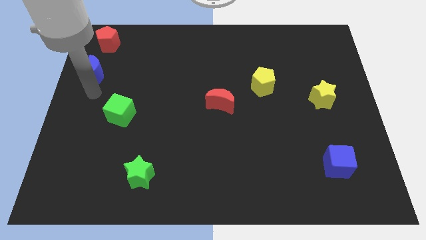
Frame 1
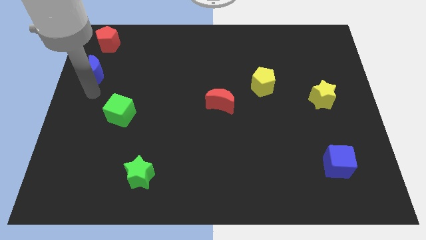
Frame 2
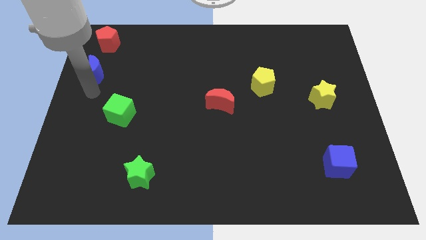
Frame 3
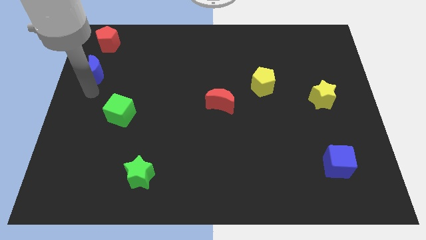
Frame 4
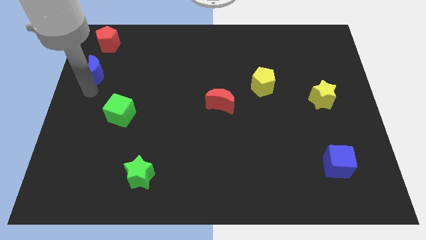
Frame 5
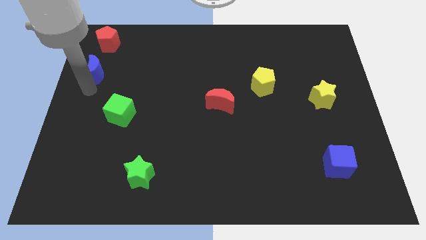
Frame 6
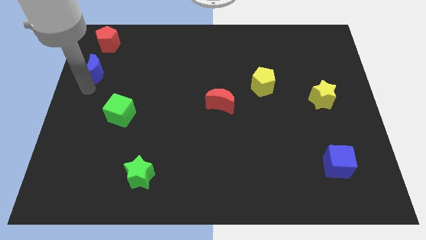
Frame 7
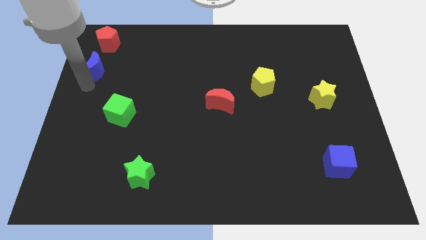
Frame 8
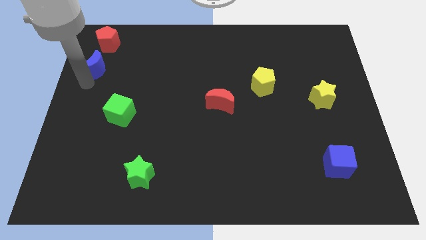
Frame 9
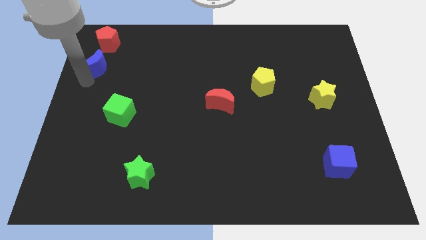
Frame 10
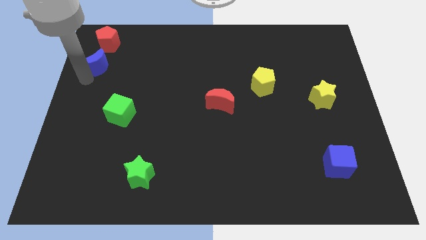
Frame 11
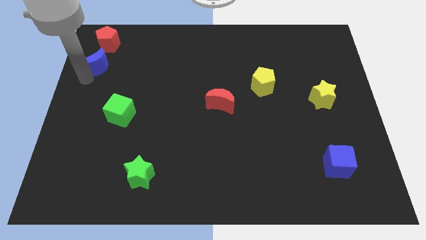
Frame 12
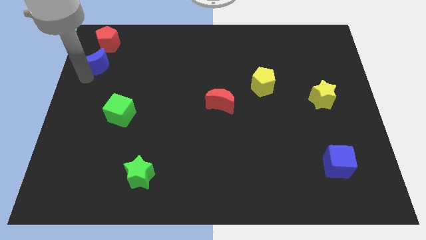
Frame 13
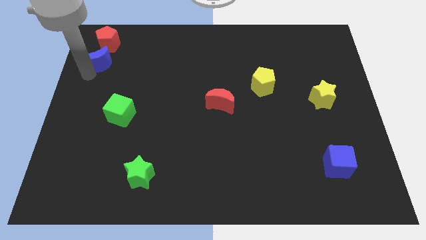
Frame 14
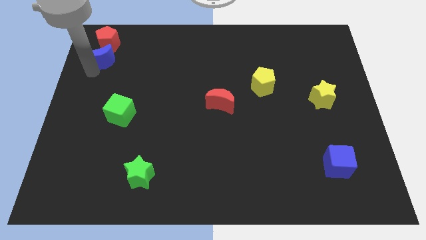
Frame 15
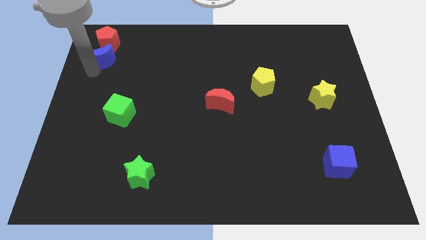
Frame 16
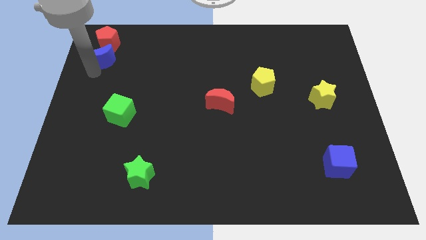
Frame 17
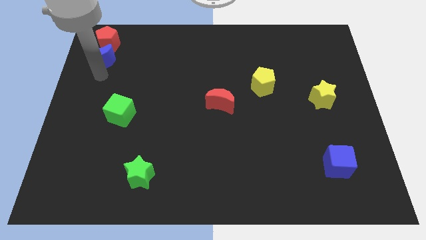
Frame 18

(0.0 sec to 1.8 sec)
push the blue crescent towards the top left side of the board

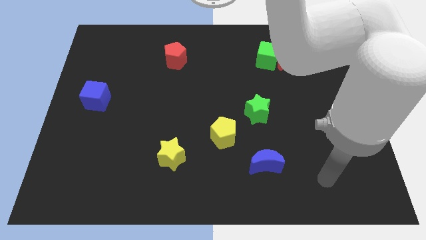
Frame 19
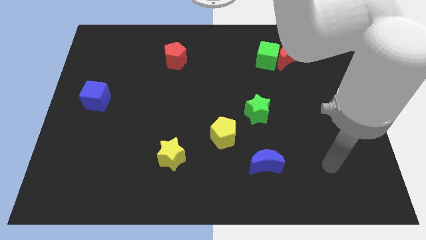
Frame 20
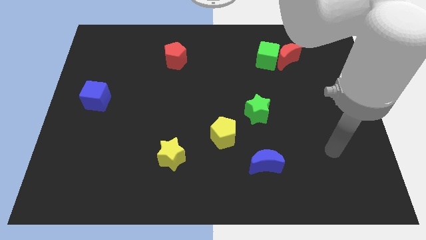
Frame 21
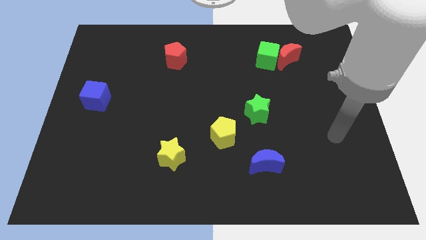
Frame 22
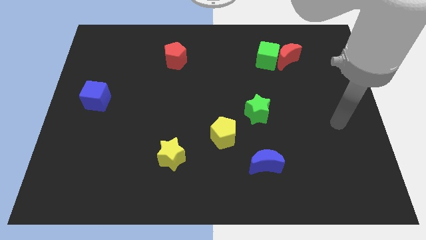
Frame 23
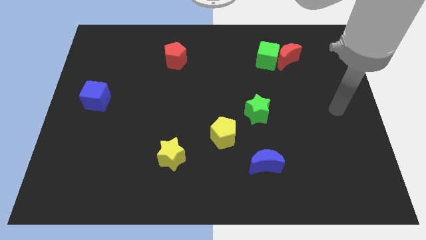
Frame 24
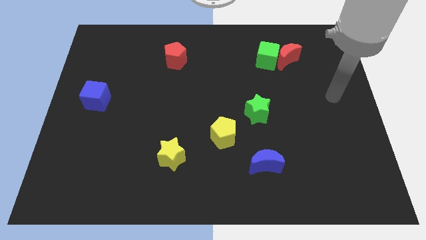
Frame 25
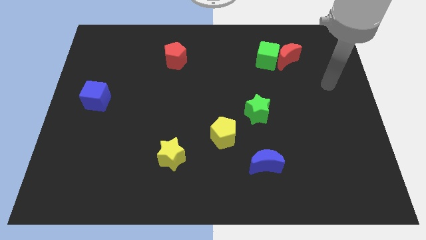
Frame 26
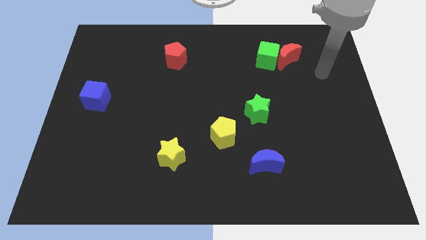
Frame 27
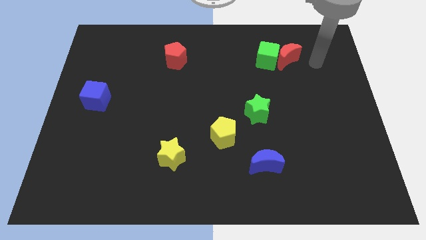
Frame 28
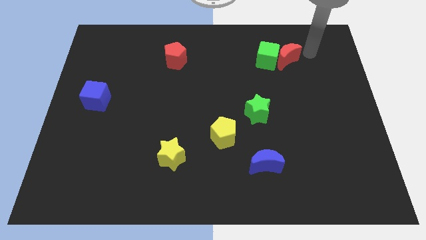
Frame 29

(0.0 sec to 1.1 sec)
slide your arm towards top right

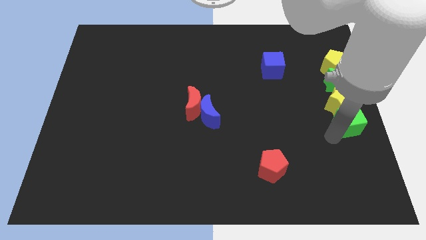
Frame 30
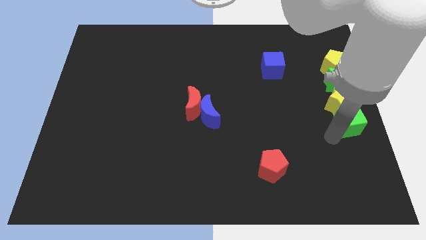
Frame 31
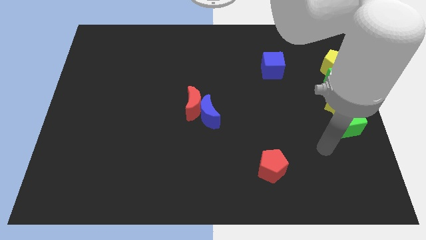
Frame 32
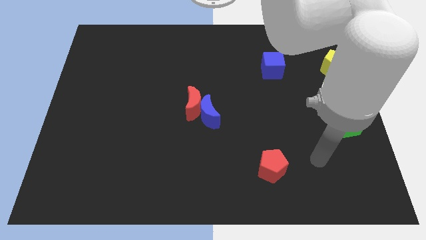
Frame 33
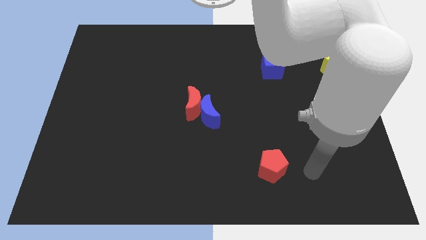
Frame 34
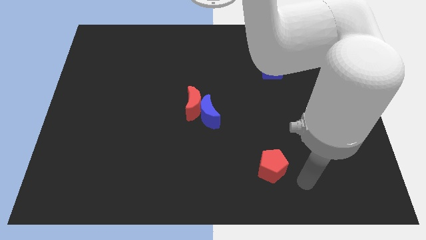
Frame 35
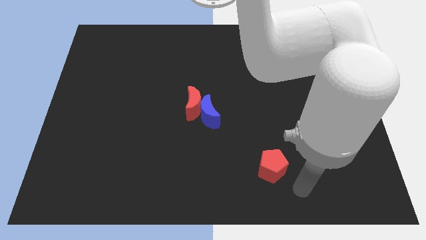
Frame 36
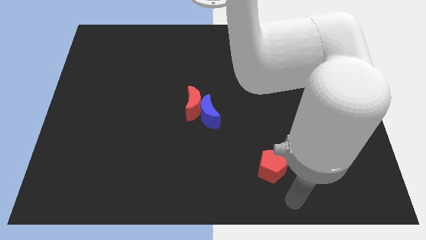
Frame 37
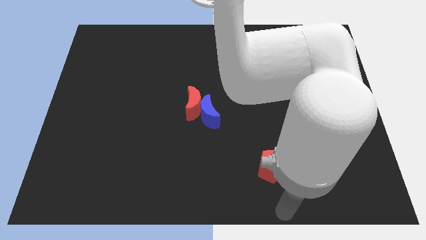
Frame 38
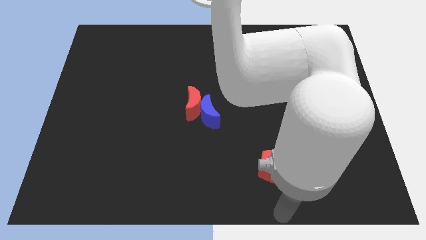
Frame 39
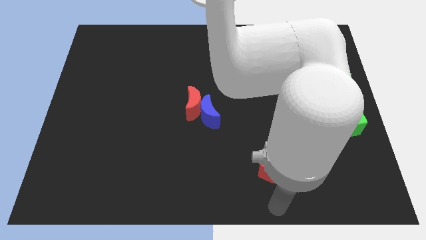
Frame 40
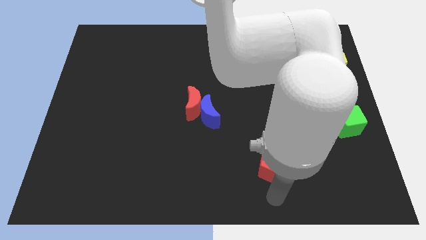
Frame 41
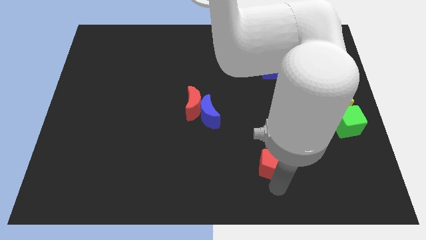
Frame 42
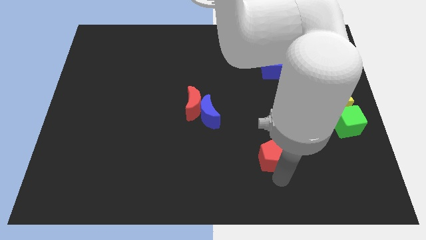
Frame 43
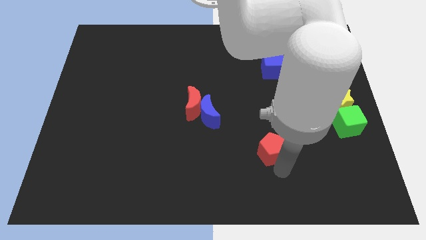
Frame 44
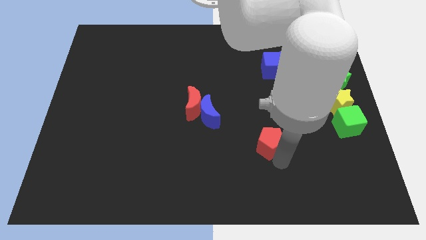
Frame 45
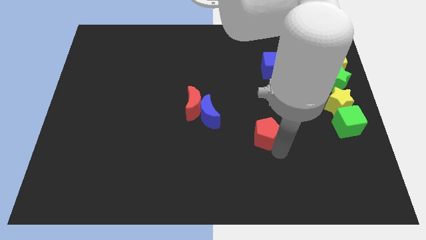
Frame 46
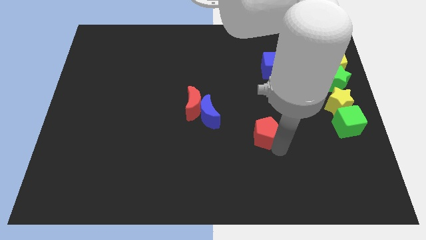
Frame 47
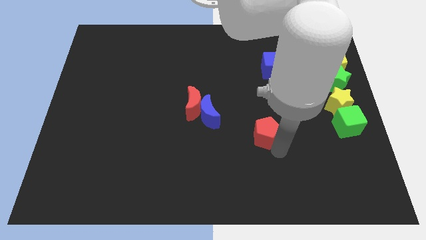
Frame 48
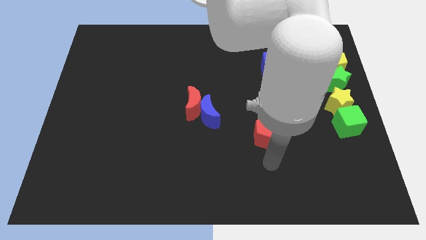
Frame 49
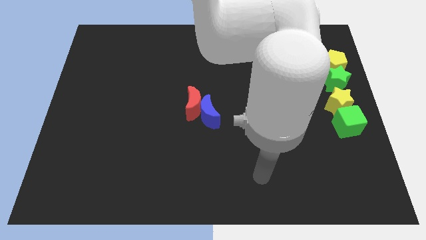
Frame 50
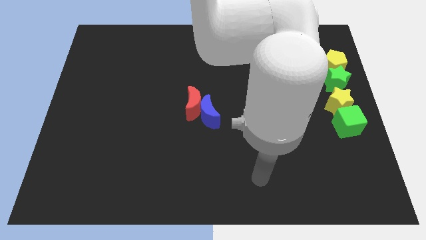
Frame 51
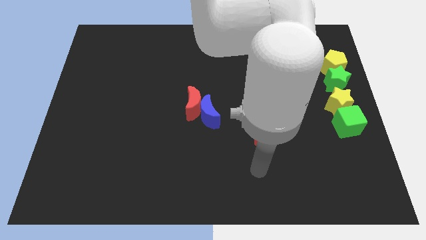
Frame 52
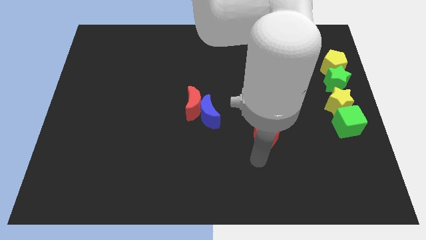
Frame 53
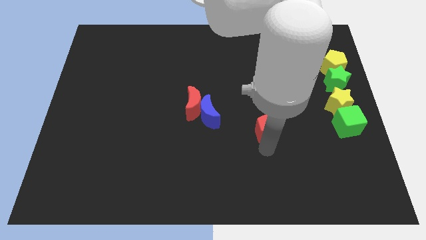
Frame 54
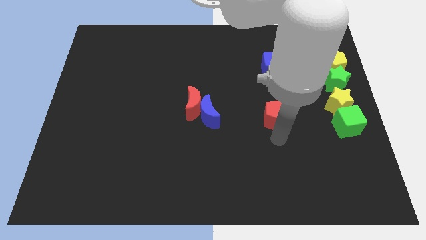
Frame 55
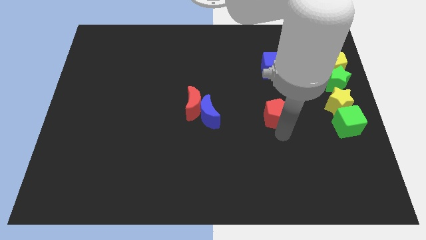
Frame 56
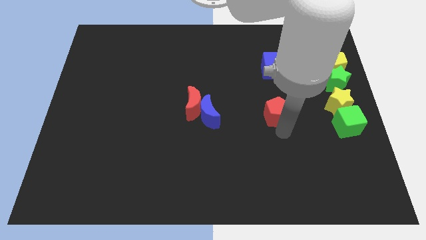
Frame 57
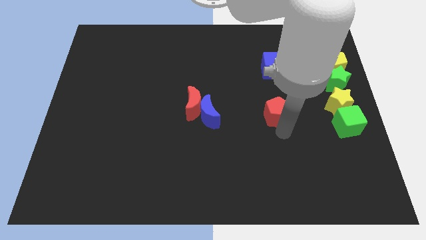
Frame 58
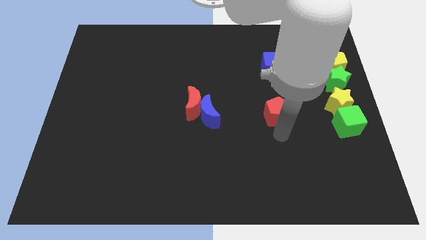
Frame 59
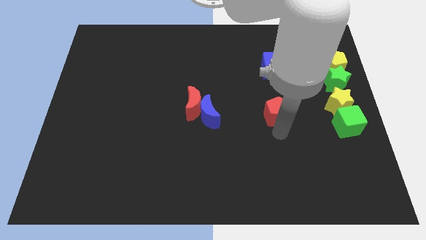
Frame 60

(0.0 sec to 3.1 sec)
place the red pentagon at the right side of the blue crescent

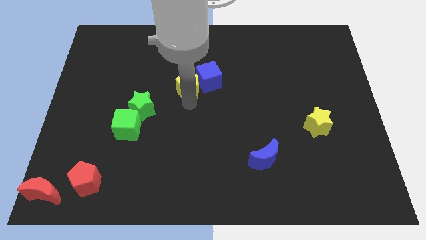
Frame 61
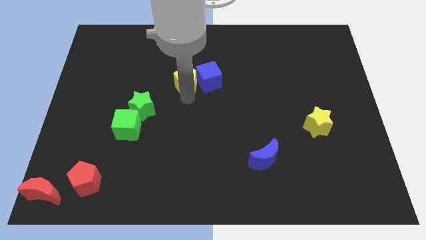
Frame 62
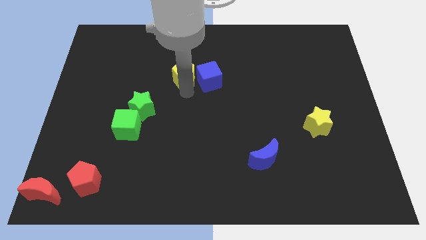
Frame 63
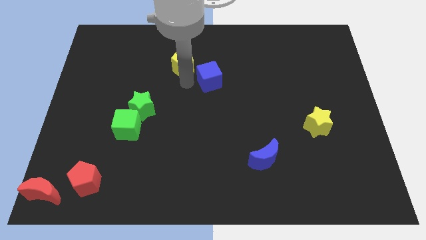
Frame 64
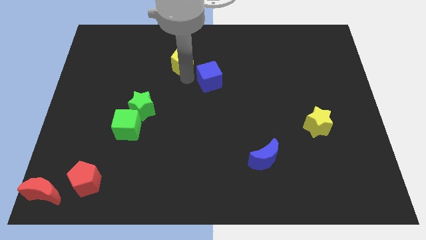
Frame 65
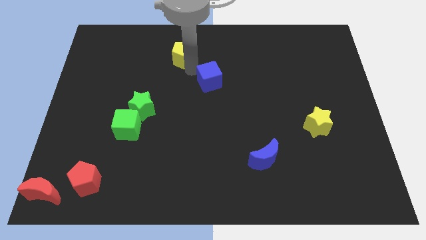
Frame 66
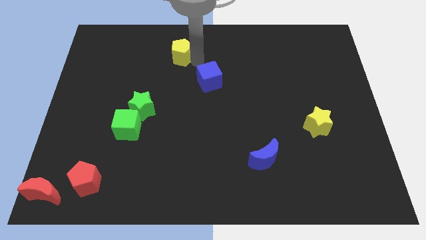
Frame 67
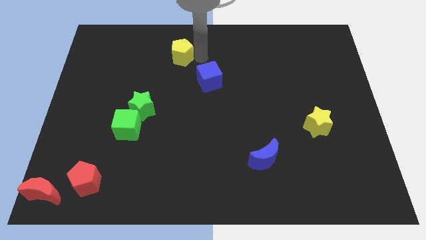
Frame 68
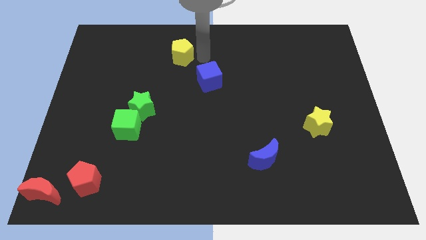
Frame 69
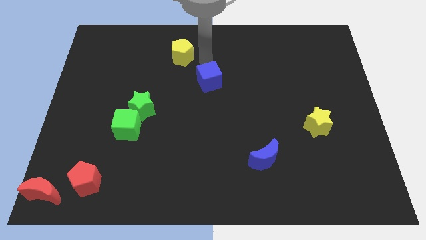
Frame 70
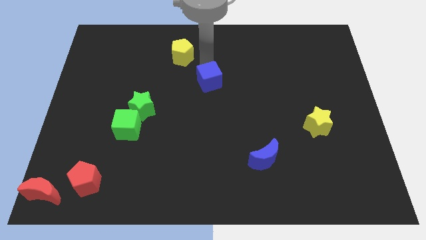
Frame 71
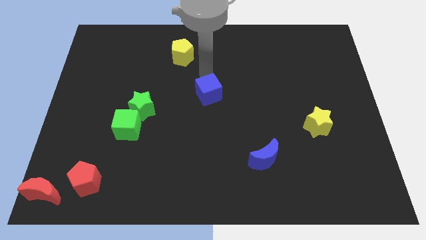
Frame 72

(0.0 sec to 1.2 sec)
separate the yellow pentagon and blue cube

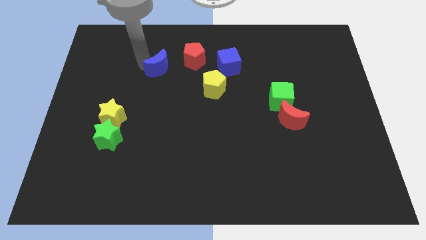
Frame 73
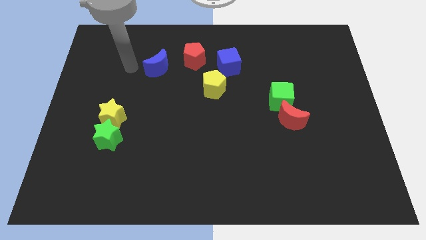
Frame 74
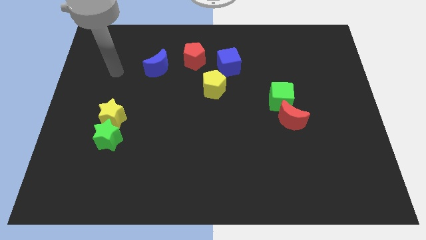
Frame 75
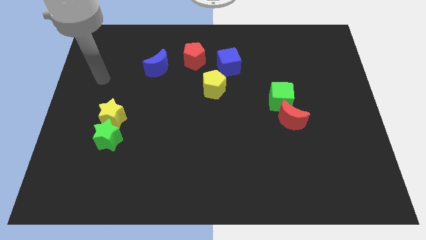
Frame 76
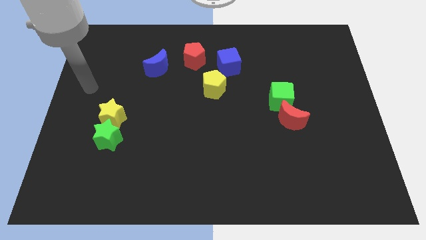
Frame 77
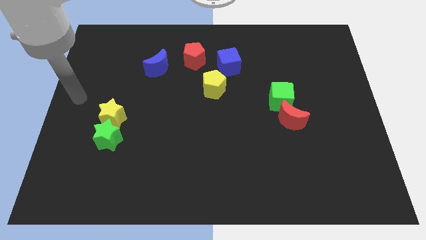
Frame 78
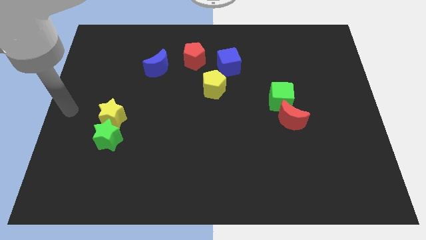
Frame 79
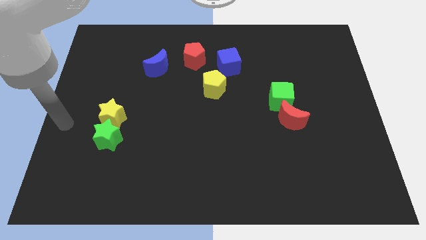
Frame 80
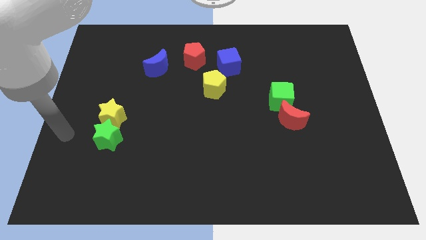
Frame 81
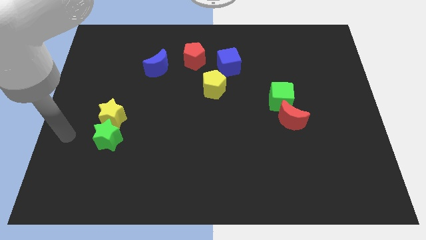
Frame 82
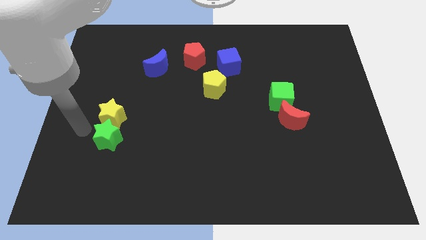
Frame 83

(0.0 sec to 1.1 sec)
move yourself away from the blue moon

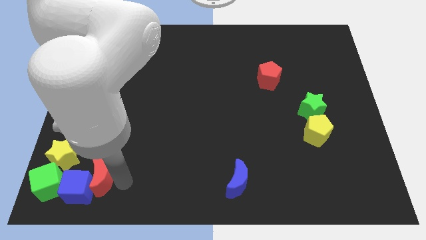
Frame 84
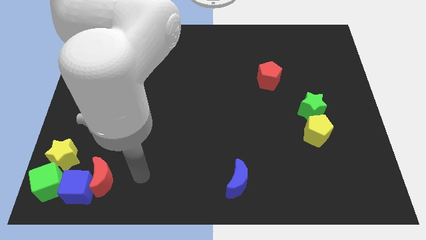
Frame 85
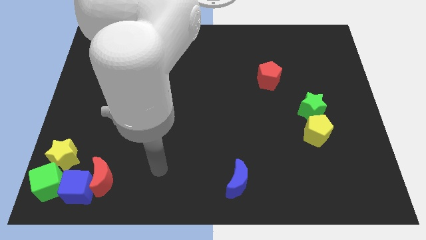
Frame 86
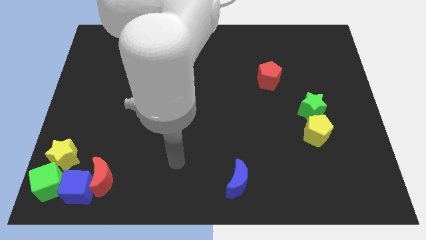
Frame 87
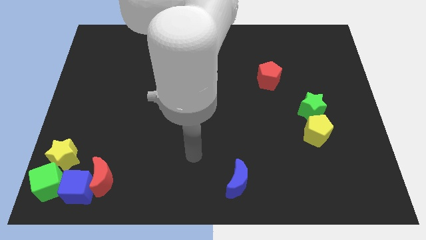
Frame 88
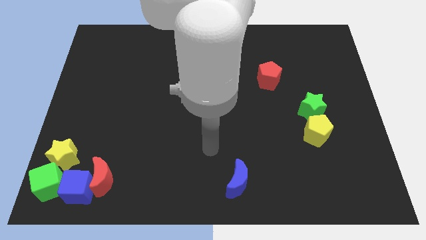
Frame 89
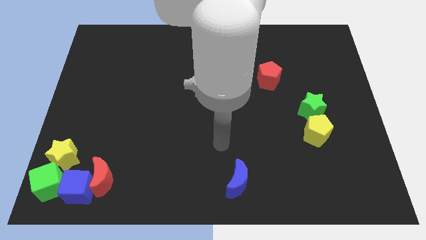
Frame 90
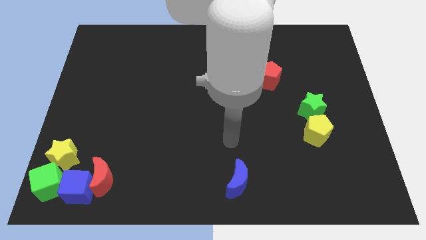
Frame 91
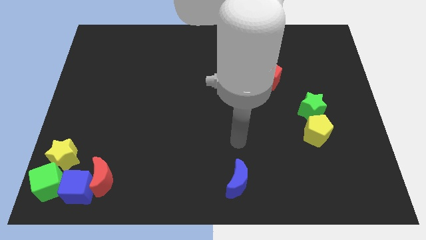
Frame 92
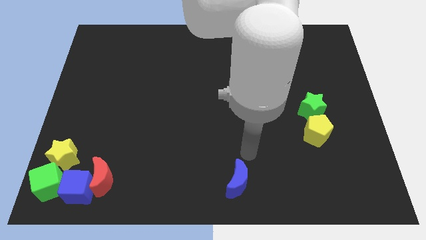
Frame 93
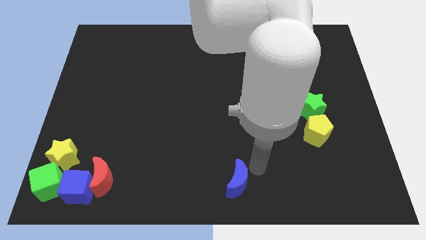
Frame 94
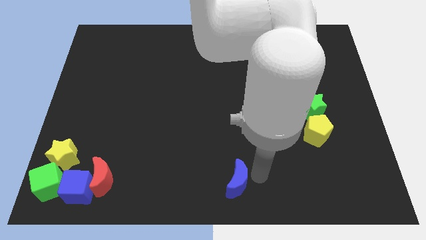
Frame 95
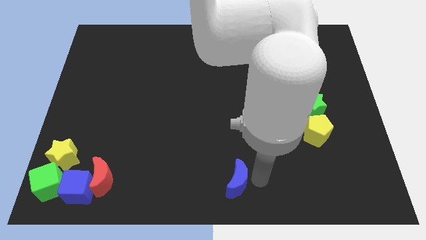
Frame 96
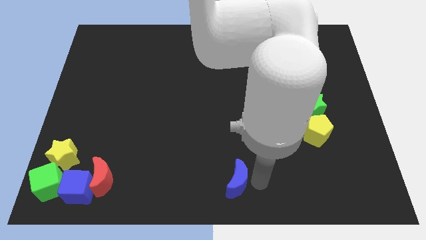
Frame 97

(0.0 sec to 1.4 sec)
place your arm to the right of blue moon
